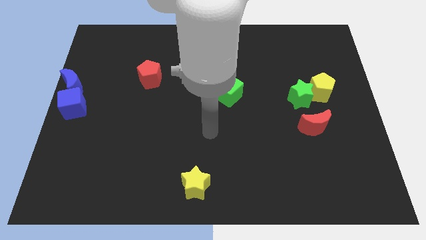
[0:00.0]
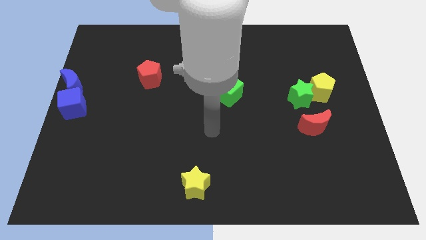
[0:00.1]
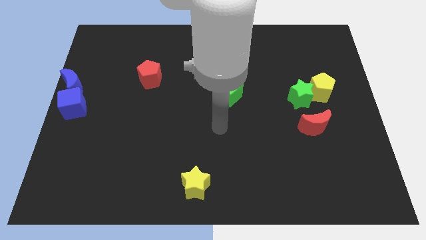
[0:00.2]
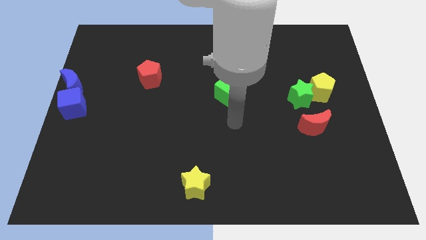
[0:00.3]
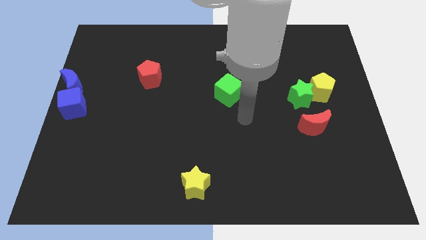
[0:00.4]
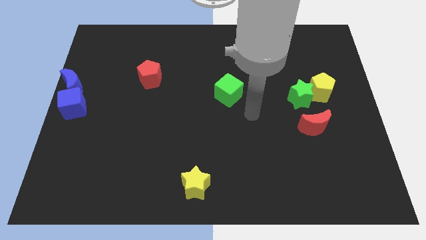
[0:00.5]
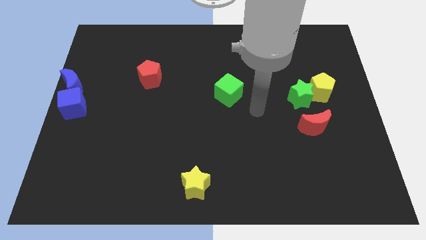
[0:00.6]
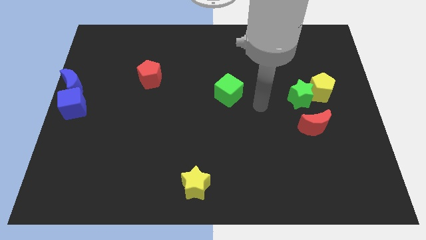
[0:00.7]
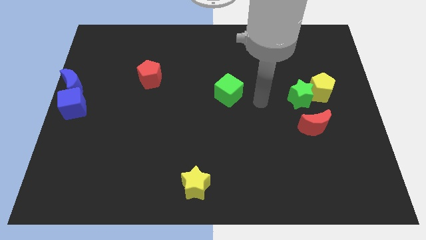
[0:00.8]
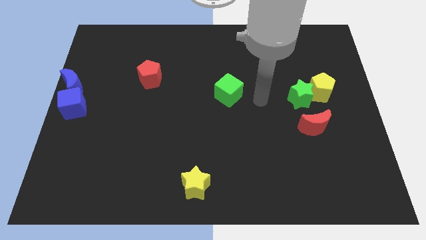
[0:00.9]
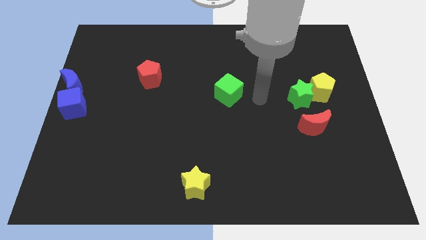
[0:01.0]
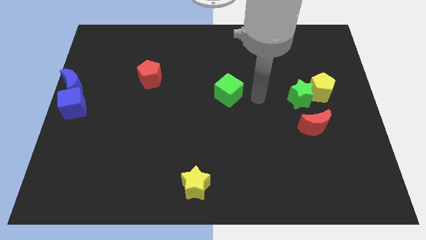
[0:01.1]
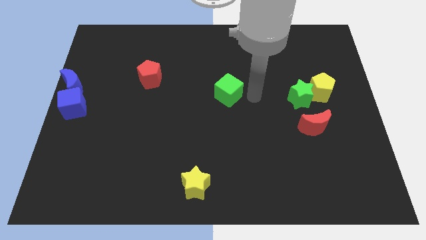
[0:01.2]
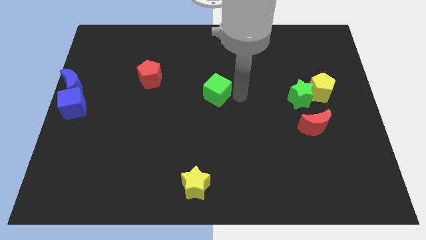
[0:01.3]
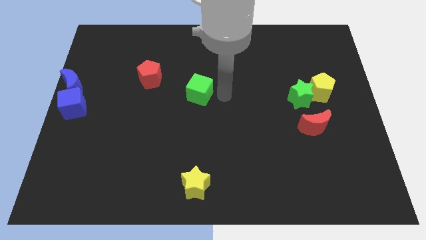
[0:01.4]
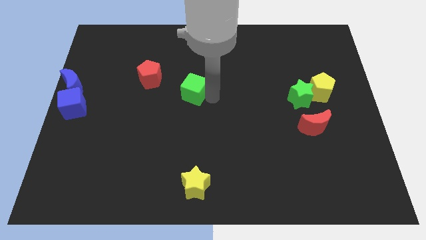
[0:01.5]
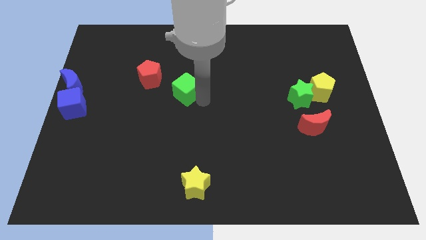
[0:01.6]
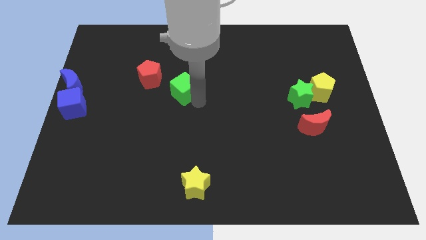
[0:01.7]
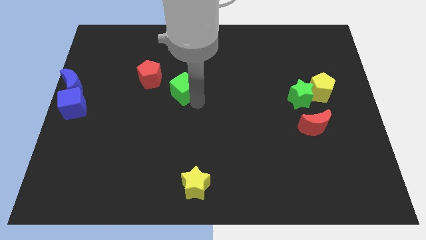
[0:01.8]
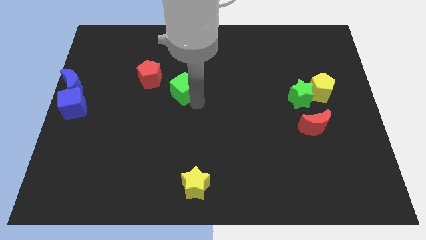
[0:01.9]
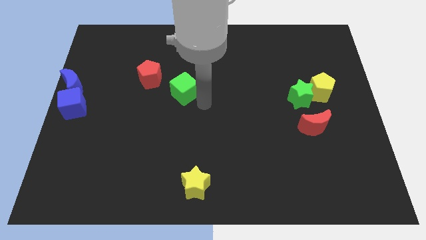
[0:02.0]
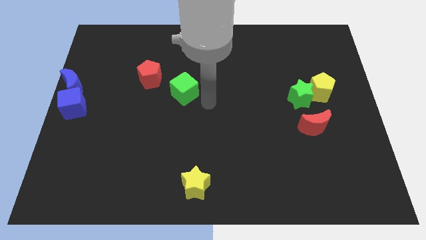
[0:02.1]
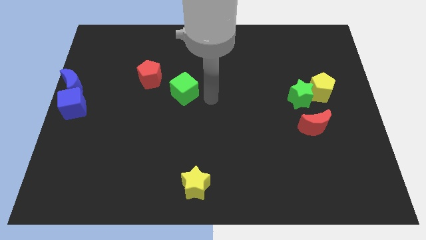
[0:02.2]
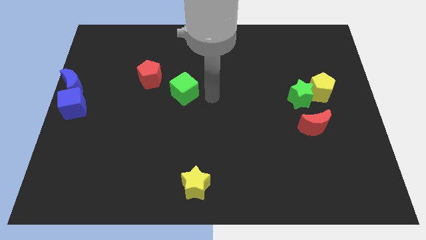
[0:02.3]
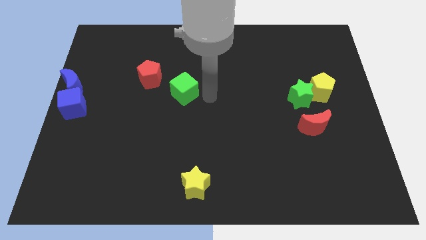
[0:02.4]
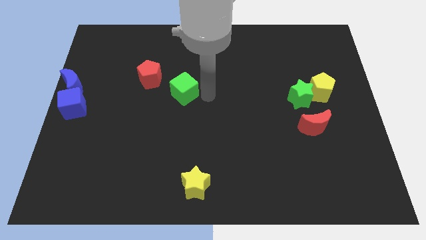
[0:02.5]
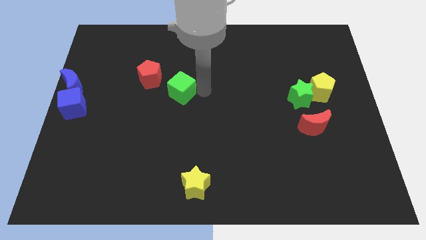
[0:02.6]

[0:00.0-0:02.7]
push the green cube towards the red pentagon

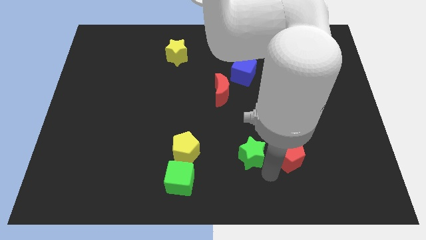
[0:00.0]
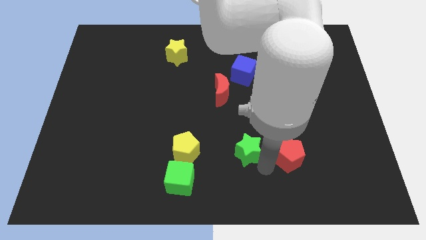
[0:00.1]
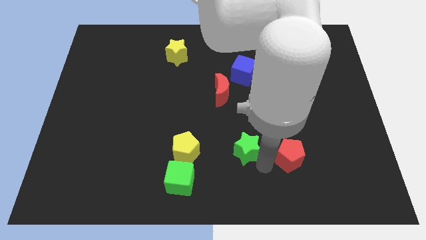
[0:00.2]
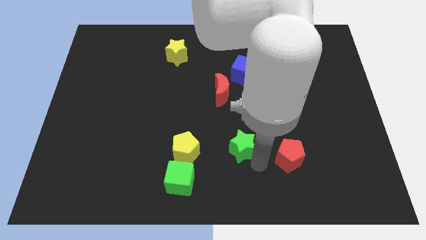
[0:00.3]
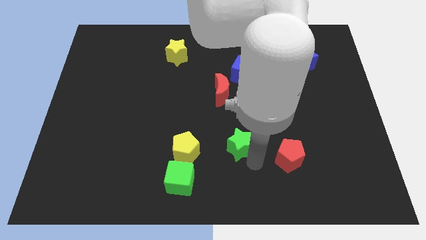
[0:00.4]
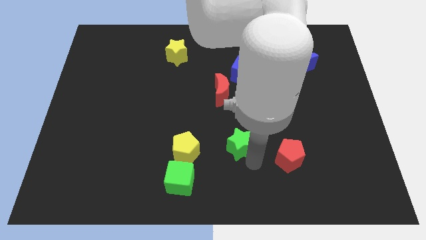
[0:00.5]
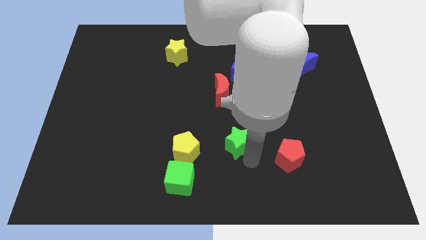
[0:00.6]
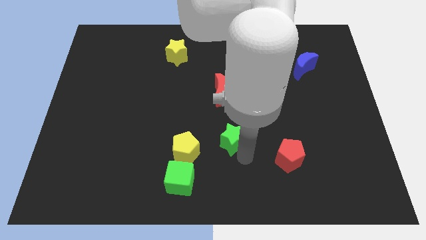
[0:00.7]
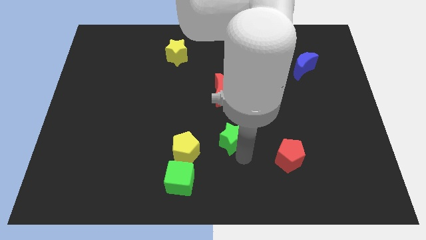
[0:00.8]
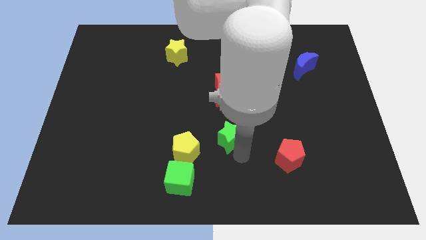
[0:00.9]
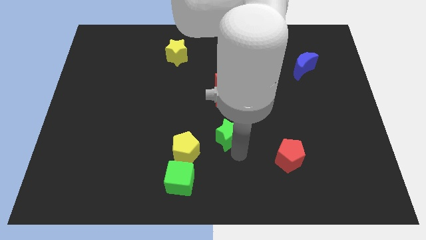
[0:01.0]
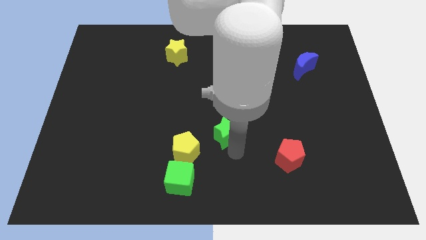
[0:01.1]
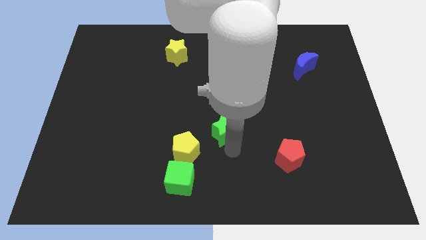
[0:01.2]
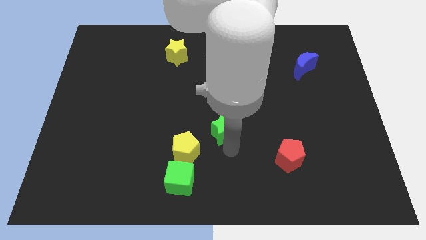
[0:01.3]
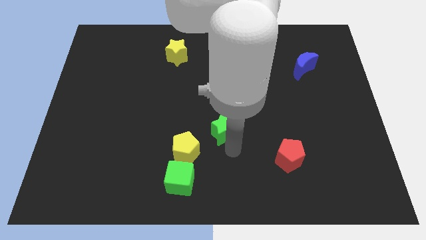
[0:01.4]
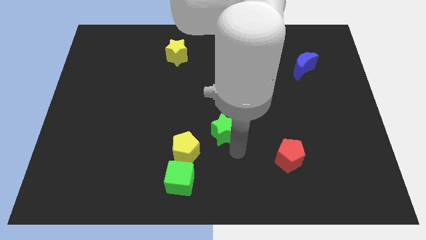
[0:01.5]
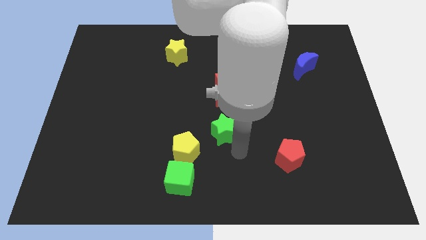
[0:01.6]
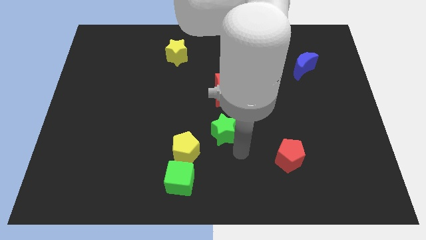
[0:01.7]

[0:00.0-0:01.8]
push the green star towards the top side of the board

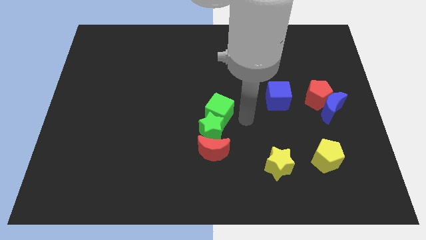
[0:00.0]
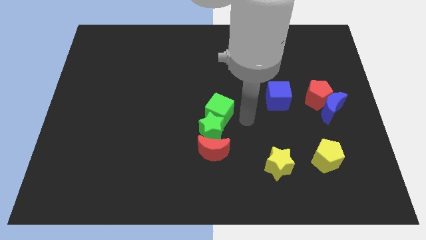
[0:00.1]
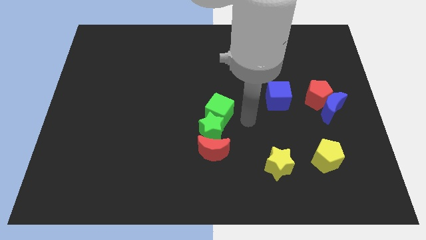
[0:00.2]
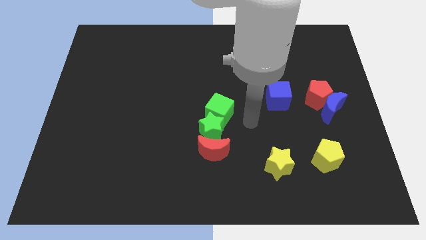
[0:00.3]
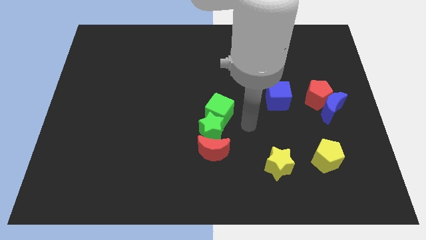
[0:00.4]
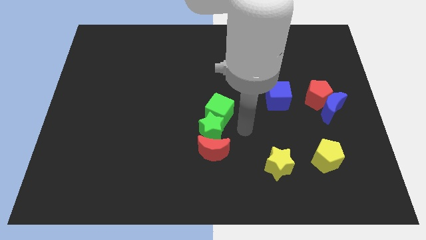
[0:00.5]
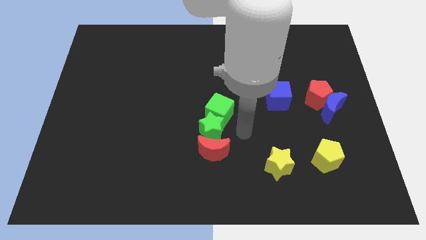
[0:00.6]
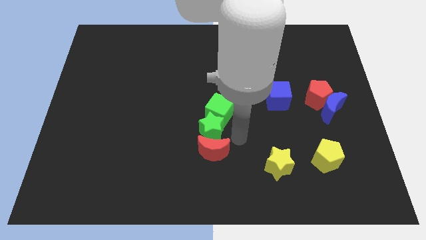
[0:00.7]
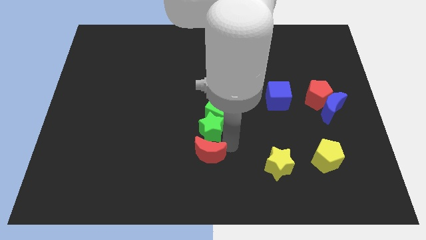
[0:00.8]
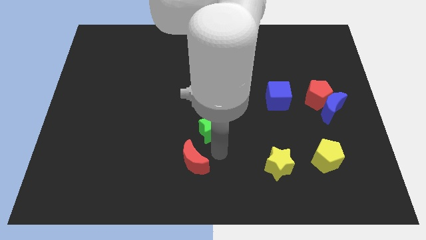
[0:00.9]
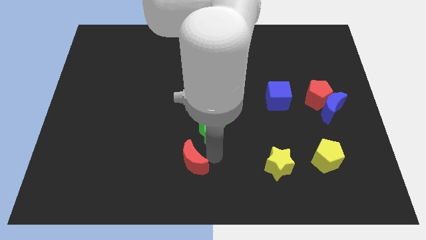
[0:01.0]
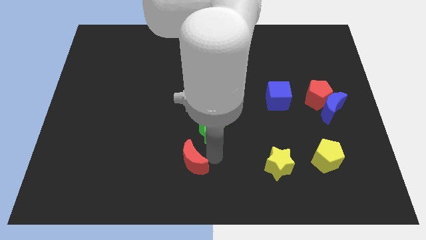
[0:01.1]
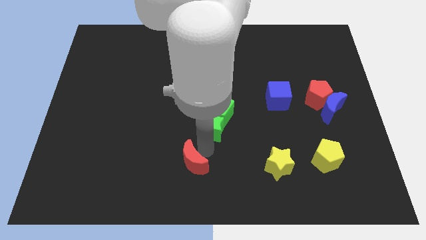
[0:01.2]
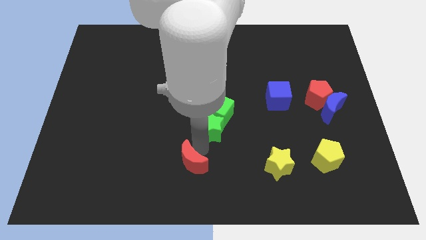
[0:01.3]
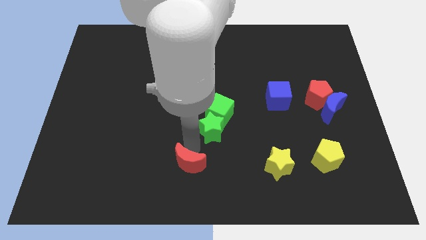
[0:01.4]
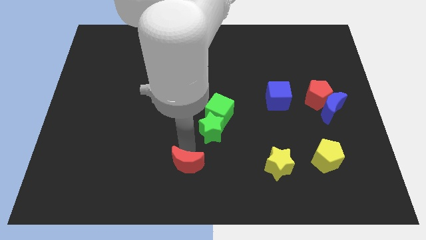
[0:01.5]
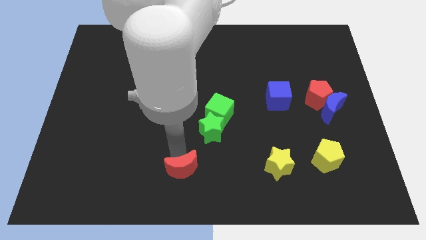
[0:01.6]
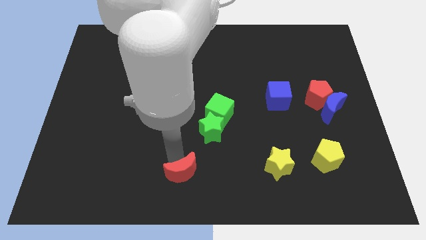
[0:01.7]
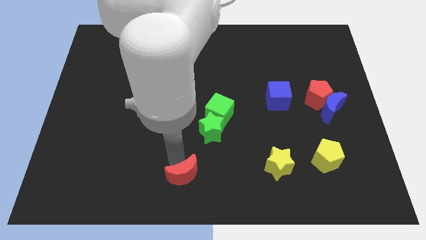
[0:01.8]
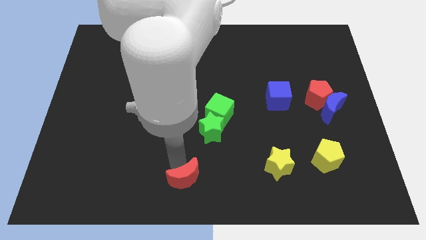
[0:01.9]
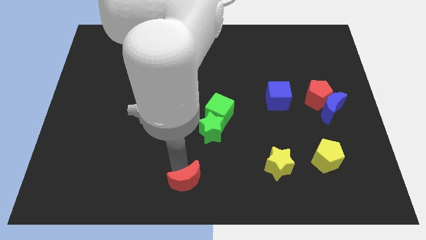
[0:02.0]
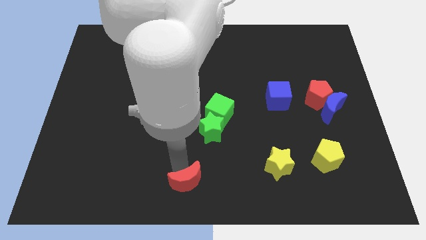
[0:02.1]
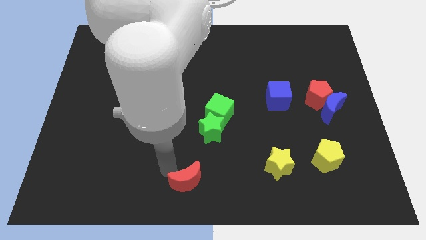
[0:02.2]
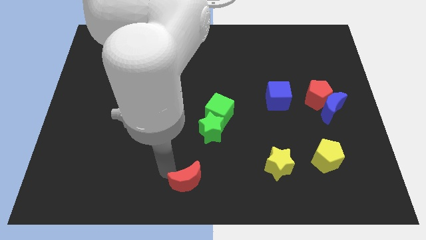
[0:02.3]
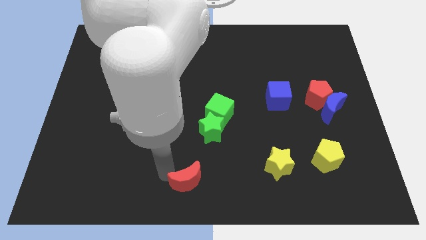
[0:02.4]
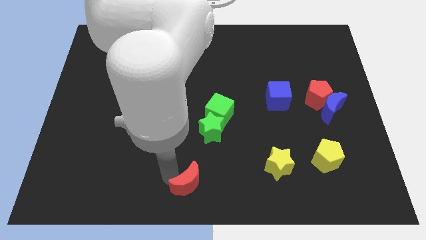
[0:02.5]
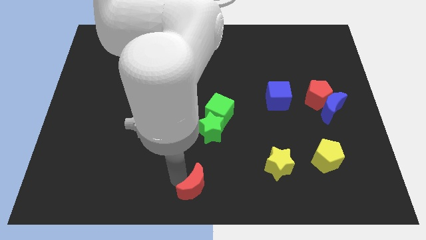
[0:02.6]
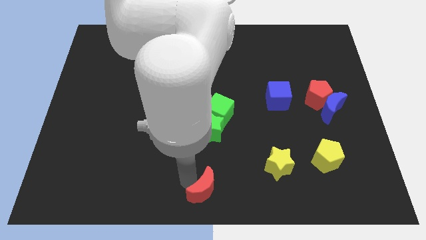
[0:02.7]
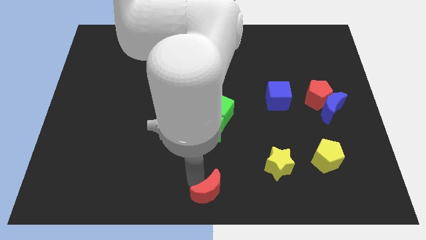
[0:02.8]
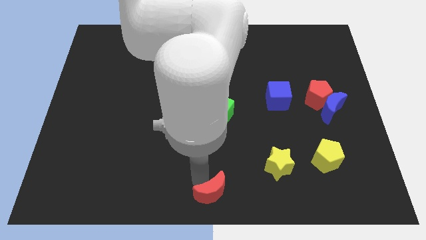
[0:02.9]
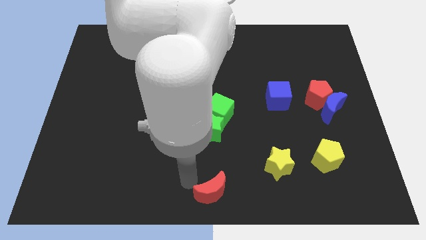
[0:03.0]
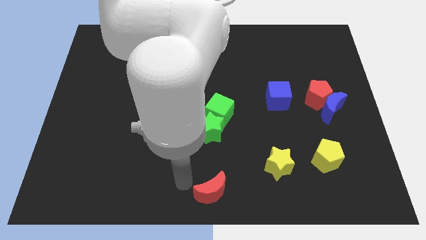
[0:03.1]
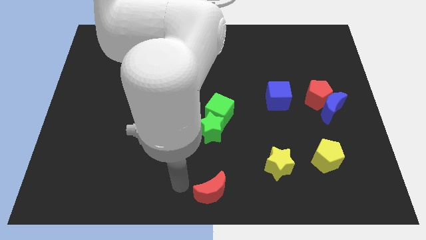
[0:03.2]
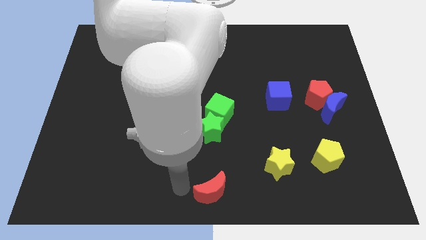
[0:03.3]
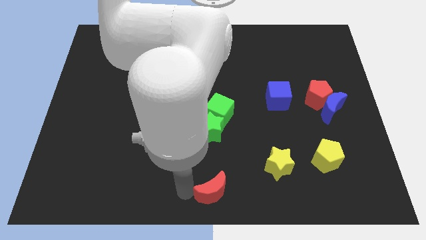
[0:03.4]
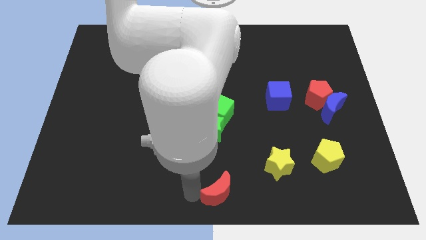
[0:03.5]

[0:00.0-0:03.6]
place red crescent vertically below green star

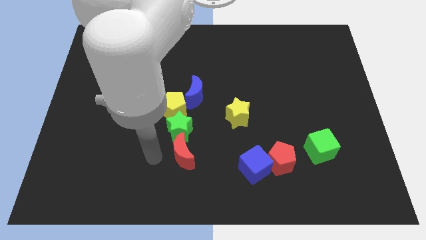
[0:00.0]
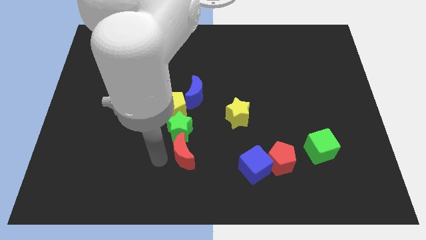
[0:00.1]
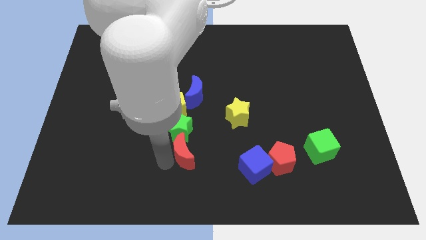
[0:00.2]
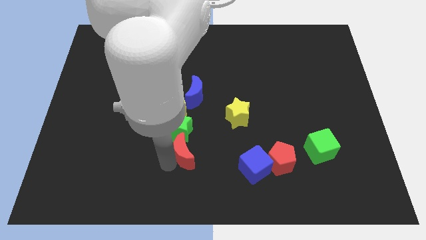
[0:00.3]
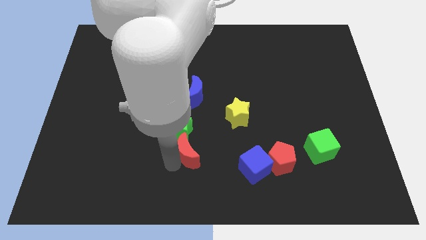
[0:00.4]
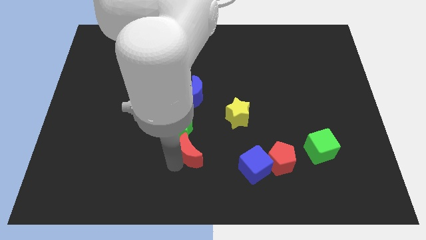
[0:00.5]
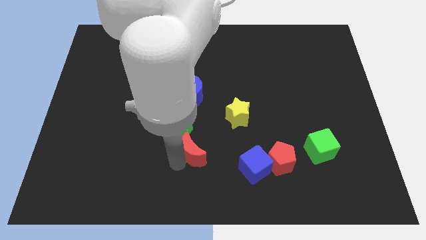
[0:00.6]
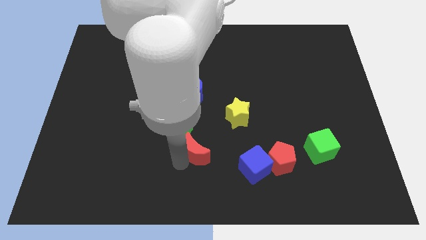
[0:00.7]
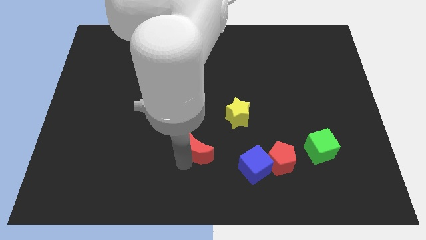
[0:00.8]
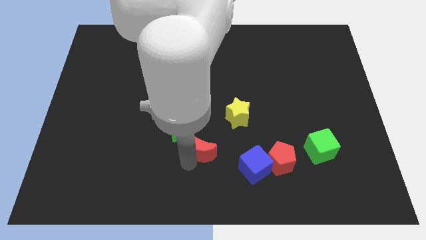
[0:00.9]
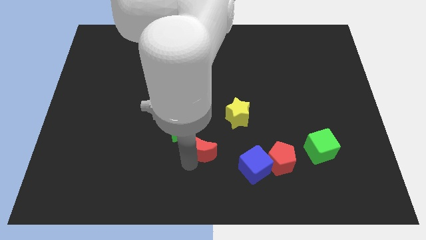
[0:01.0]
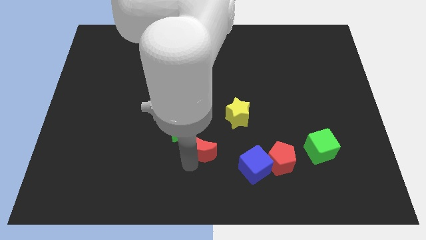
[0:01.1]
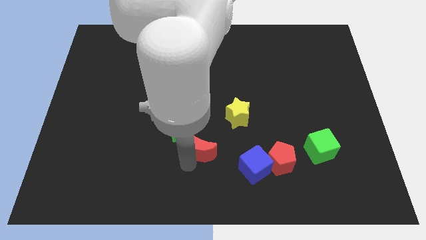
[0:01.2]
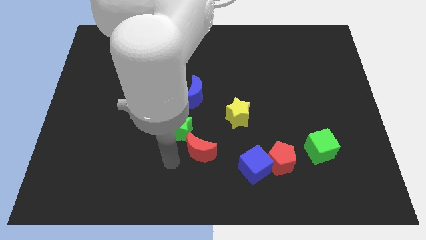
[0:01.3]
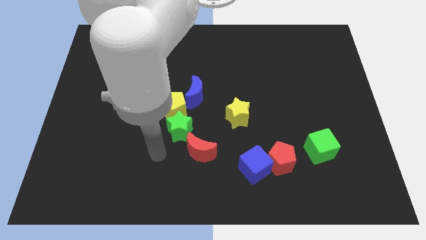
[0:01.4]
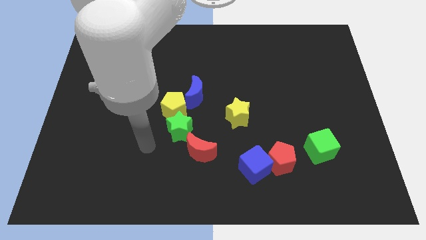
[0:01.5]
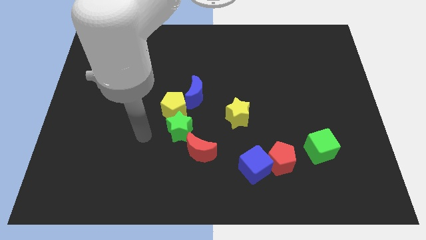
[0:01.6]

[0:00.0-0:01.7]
place red moon to the bottom right of green star
